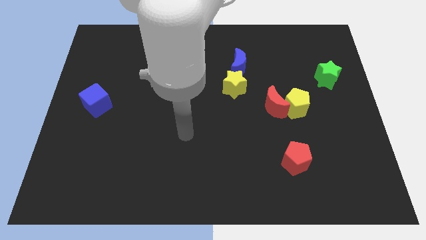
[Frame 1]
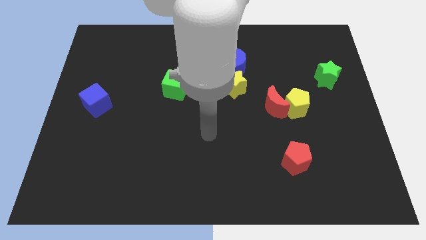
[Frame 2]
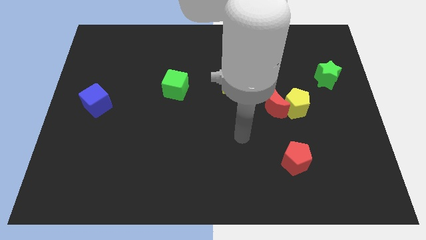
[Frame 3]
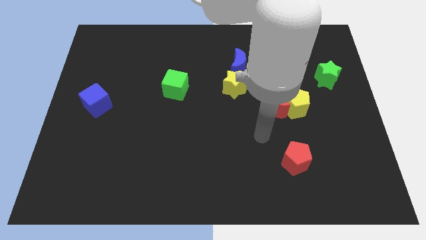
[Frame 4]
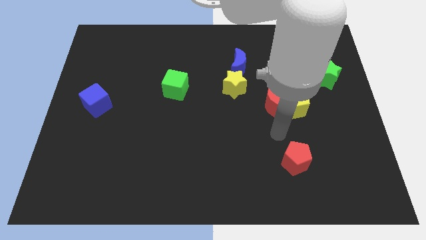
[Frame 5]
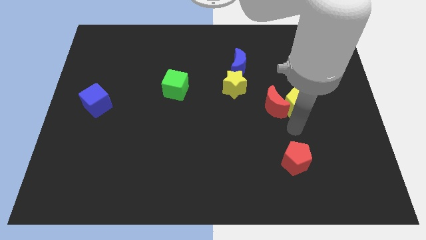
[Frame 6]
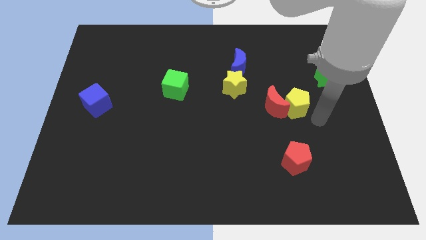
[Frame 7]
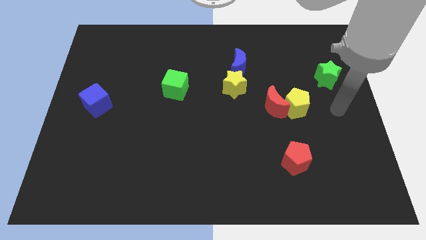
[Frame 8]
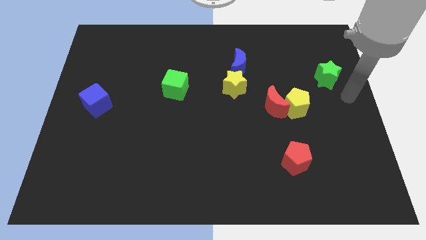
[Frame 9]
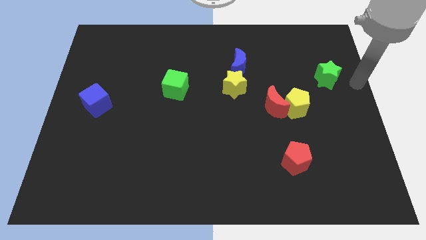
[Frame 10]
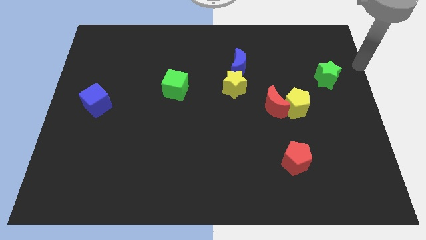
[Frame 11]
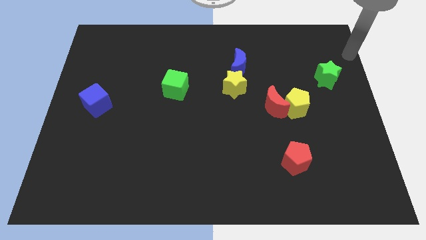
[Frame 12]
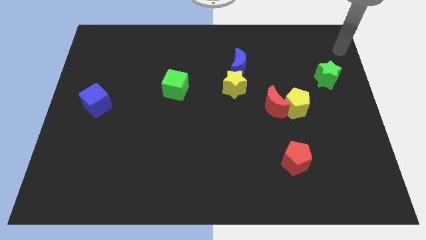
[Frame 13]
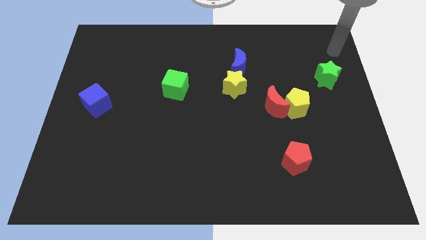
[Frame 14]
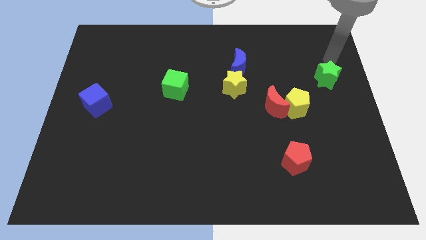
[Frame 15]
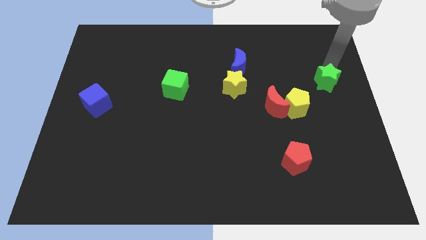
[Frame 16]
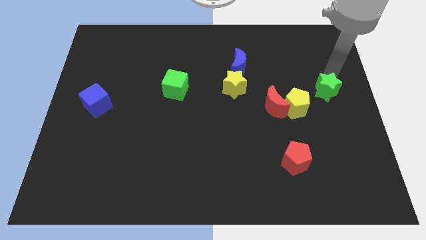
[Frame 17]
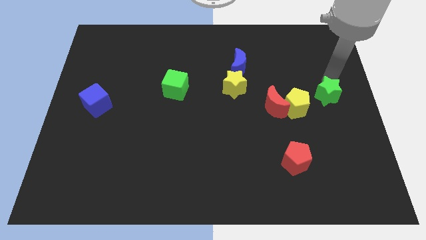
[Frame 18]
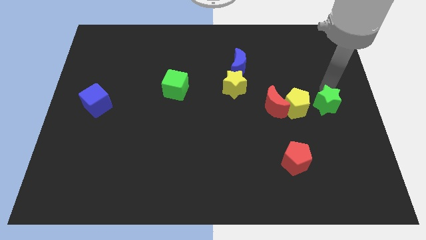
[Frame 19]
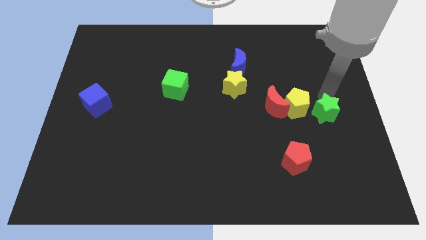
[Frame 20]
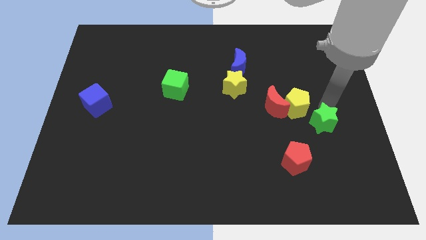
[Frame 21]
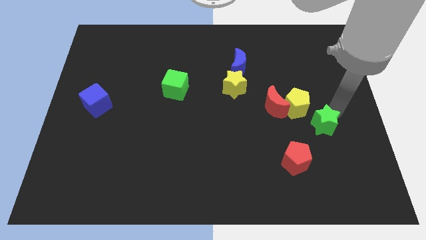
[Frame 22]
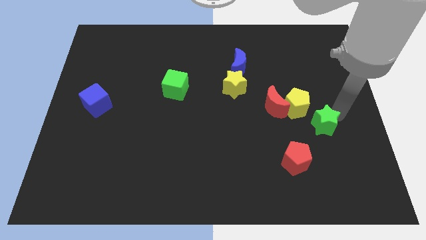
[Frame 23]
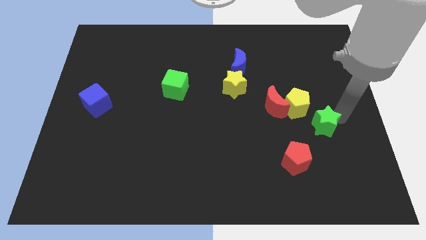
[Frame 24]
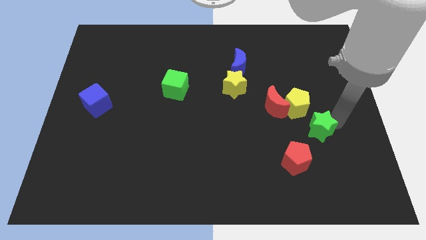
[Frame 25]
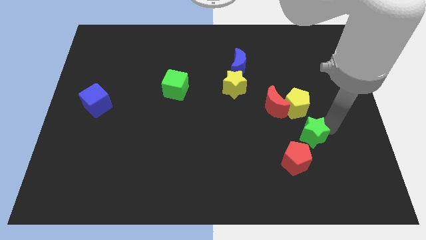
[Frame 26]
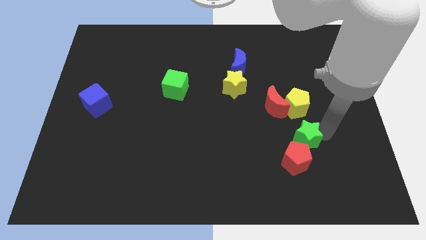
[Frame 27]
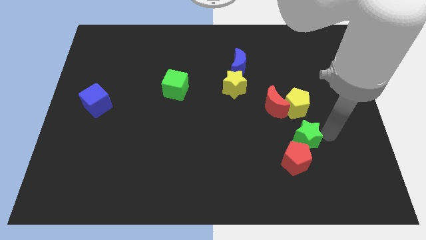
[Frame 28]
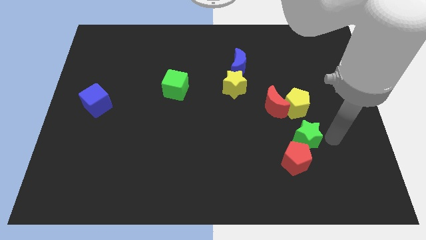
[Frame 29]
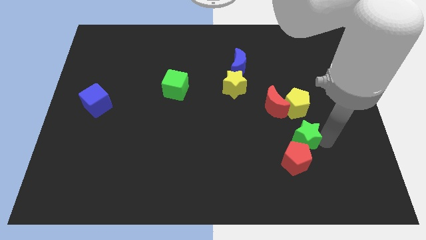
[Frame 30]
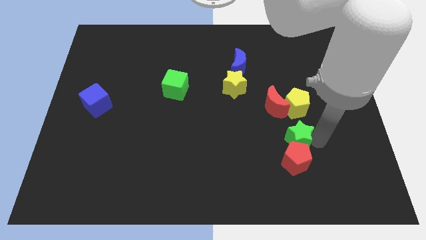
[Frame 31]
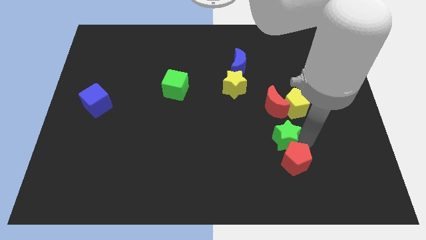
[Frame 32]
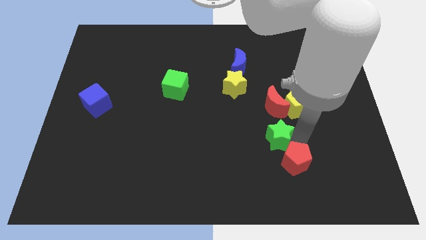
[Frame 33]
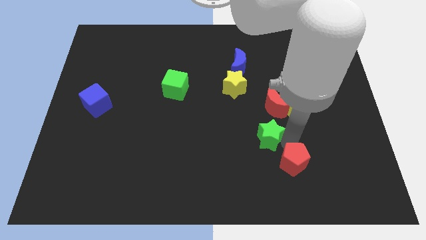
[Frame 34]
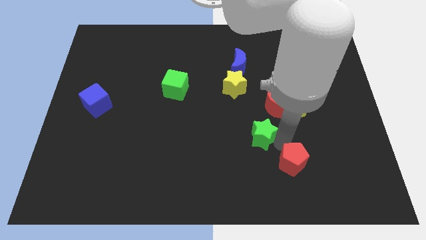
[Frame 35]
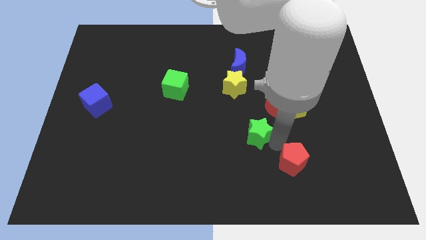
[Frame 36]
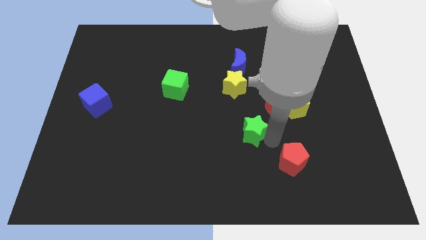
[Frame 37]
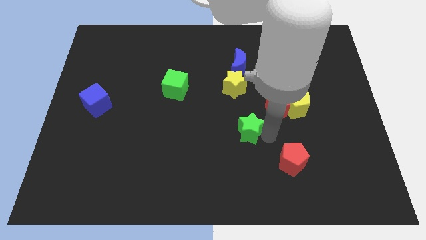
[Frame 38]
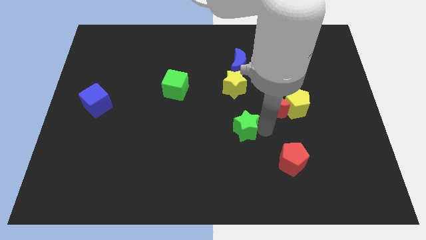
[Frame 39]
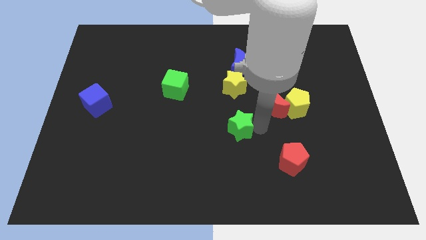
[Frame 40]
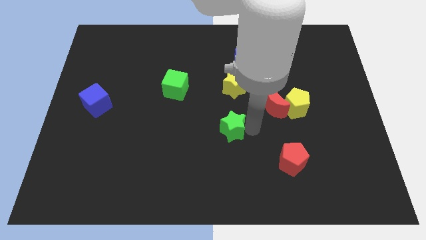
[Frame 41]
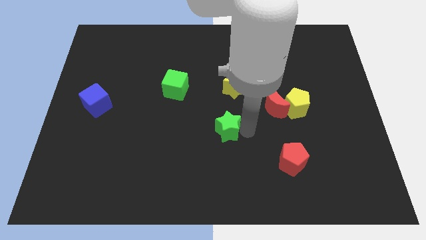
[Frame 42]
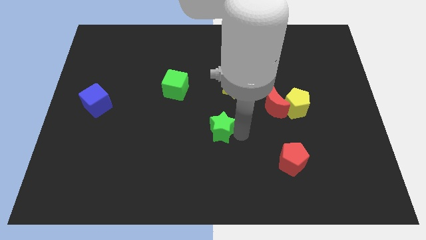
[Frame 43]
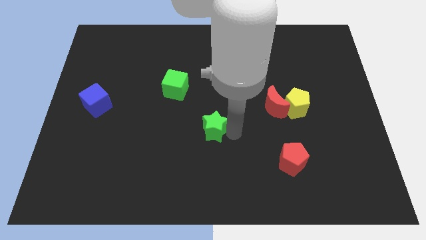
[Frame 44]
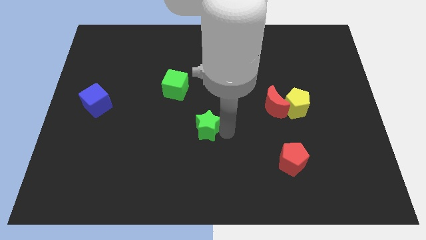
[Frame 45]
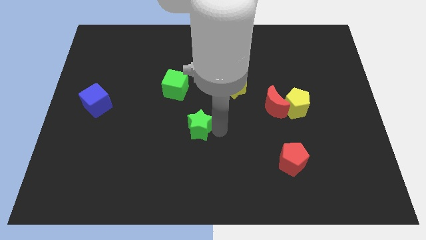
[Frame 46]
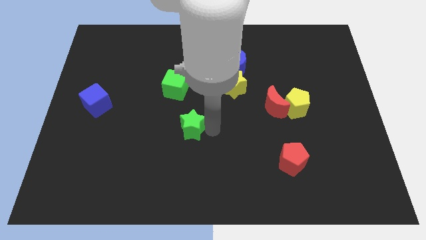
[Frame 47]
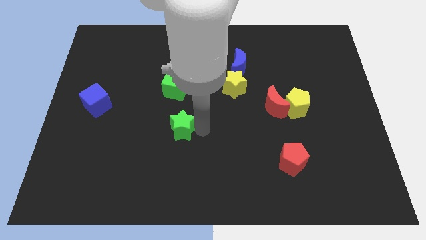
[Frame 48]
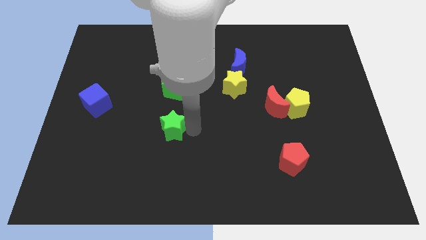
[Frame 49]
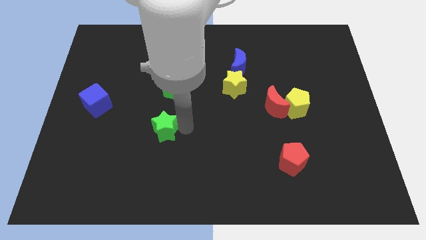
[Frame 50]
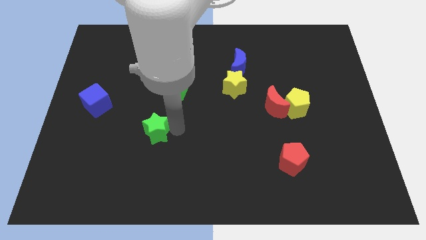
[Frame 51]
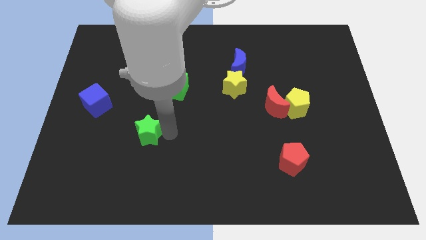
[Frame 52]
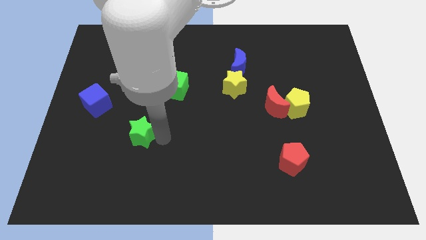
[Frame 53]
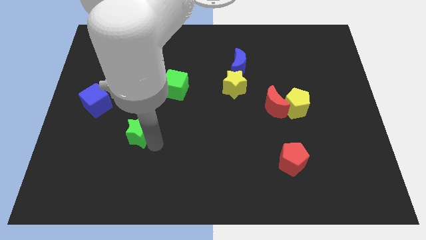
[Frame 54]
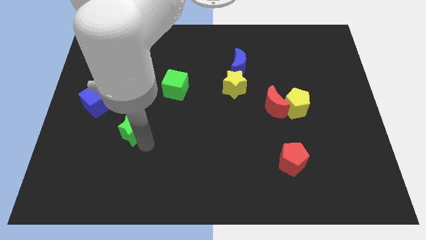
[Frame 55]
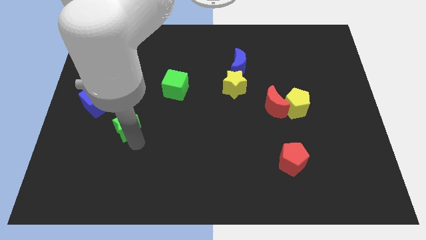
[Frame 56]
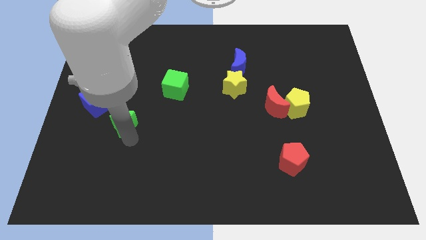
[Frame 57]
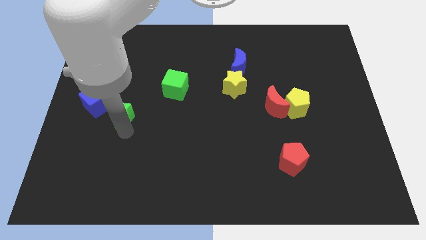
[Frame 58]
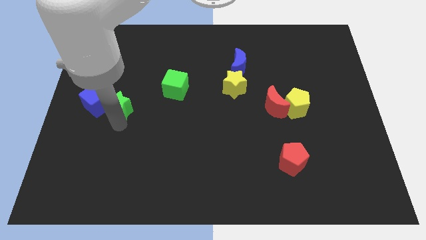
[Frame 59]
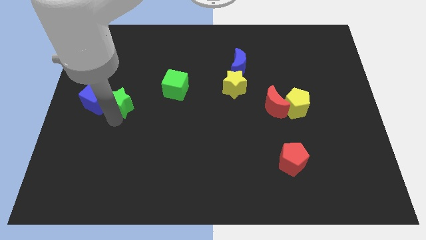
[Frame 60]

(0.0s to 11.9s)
push the green star close to the blue cube

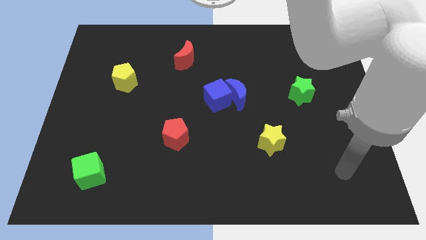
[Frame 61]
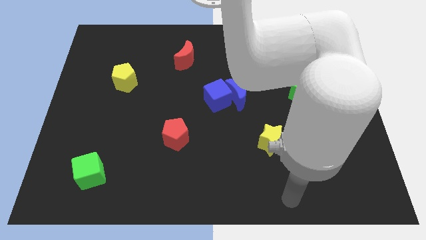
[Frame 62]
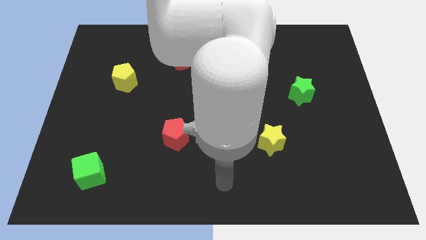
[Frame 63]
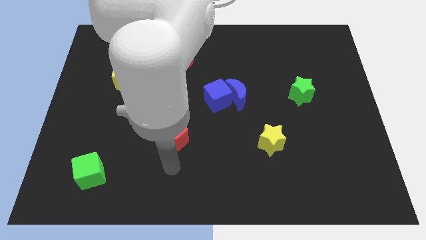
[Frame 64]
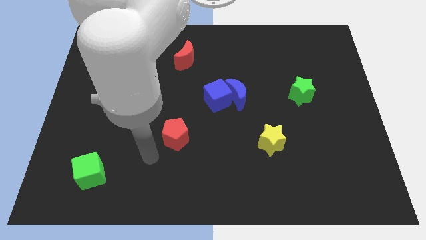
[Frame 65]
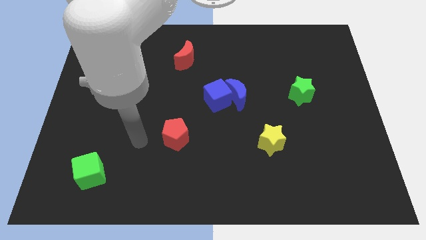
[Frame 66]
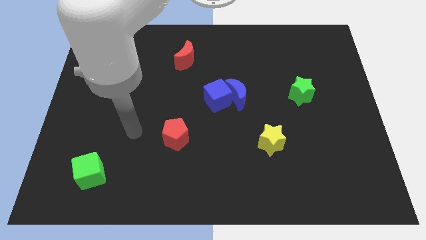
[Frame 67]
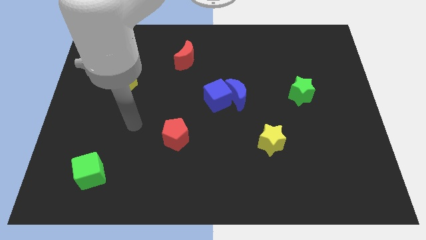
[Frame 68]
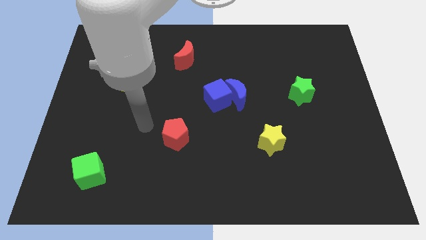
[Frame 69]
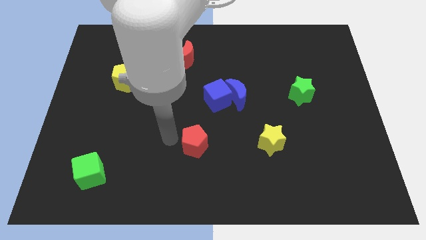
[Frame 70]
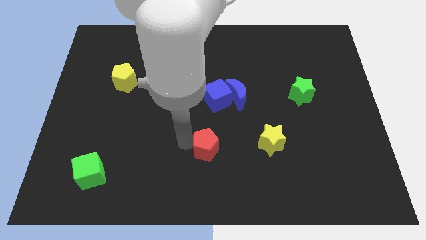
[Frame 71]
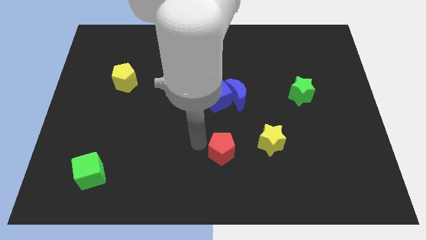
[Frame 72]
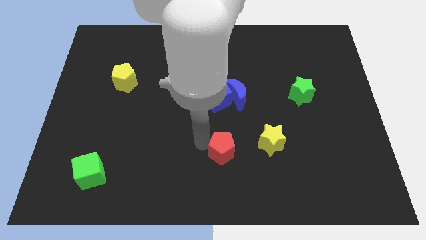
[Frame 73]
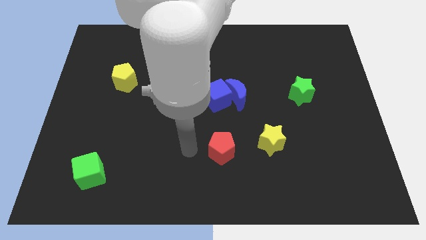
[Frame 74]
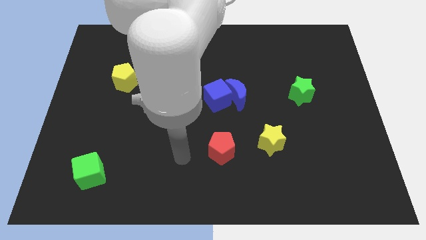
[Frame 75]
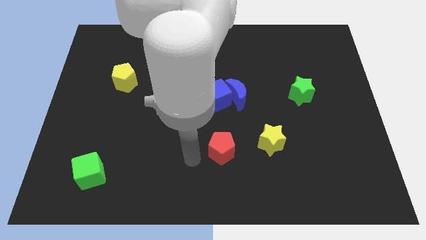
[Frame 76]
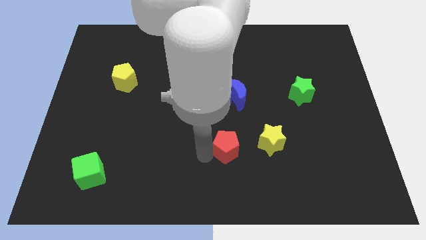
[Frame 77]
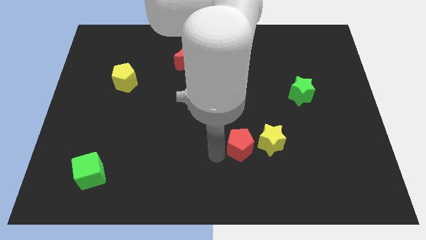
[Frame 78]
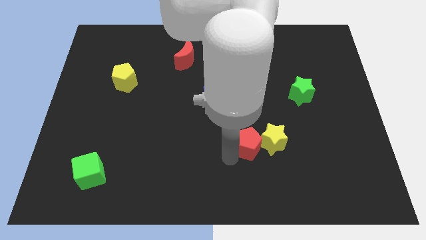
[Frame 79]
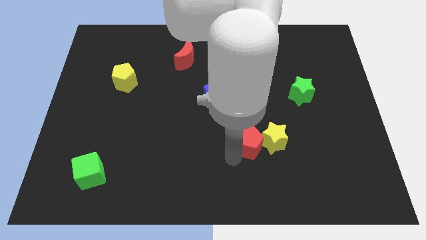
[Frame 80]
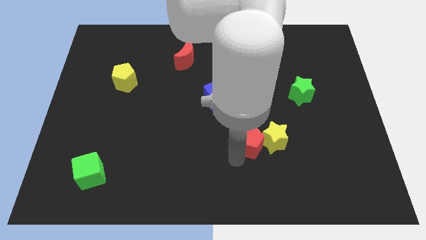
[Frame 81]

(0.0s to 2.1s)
put the red pentagon towards the yellow star

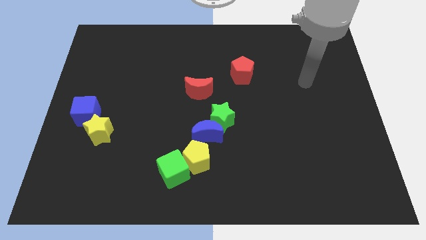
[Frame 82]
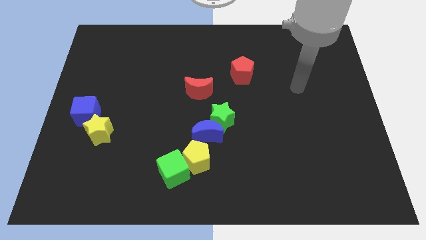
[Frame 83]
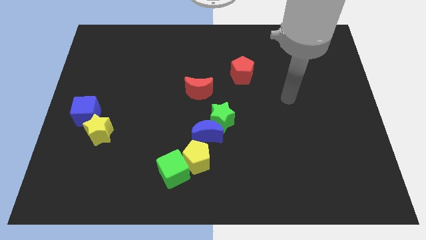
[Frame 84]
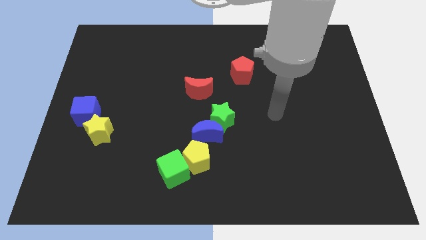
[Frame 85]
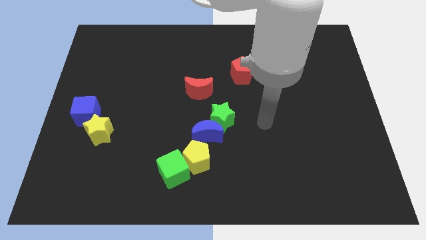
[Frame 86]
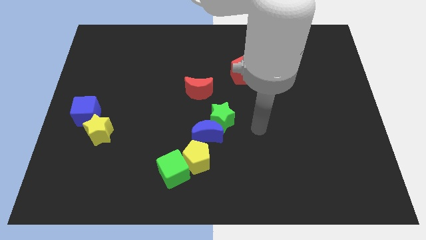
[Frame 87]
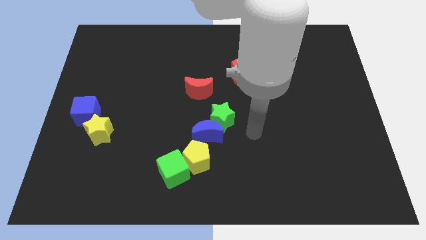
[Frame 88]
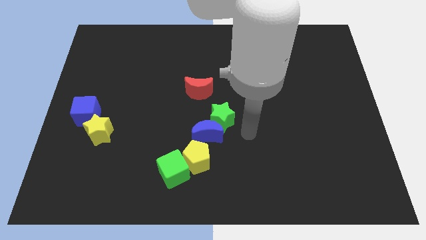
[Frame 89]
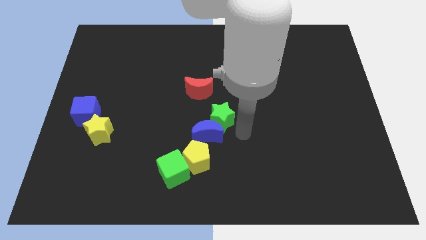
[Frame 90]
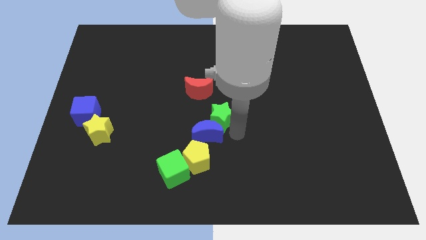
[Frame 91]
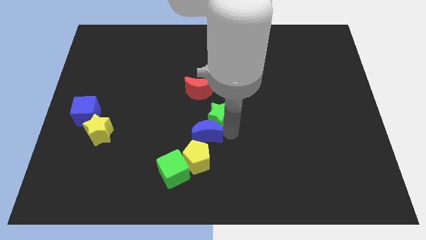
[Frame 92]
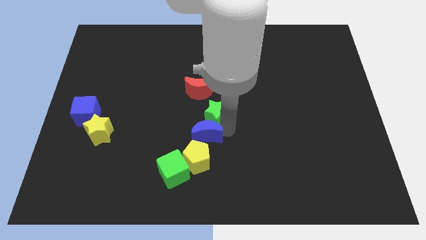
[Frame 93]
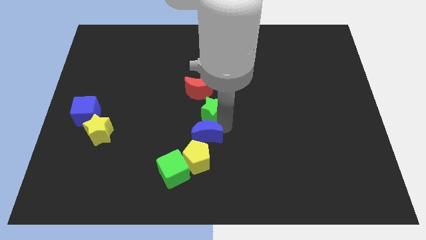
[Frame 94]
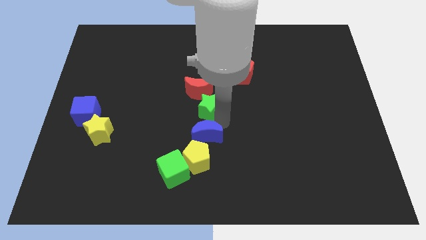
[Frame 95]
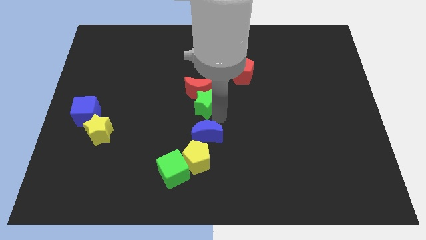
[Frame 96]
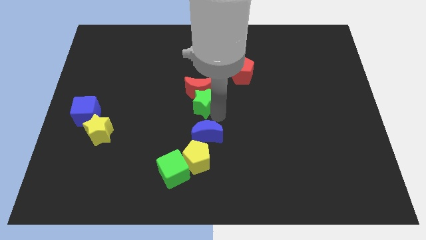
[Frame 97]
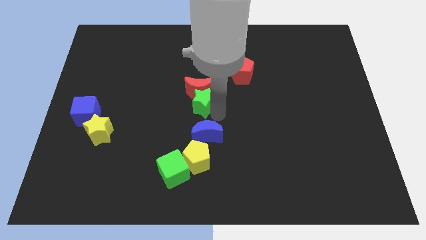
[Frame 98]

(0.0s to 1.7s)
move the green star to the red moon
